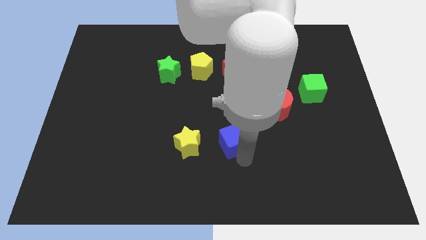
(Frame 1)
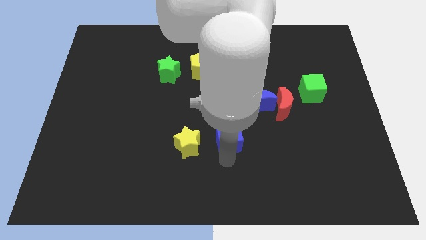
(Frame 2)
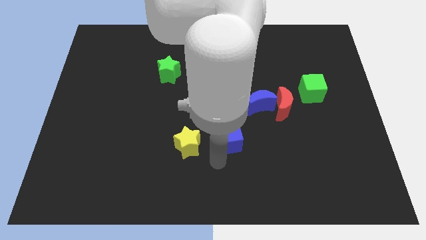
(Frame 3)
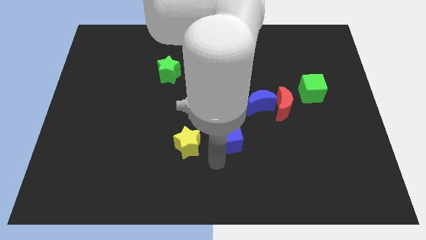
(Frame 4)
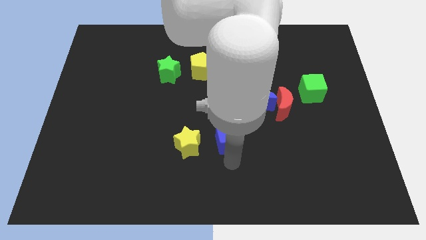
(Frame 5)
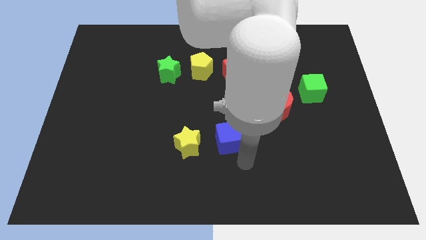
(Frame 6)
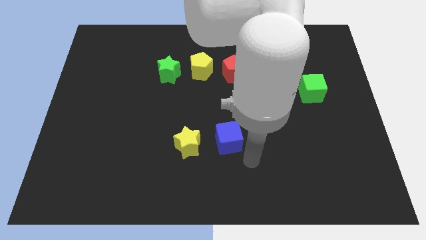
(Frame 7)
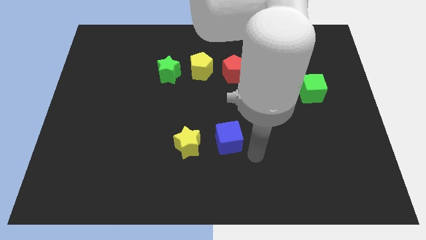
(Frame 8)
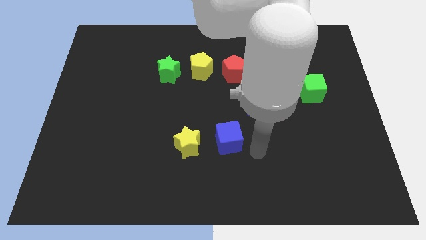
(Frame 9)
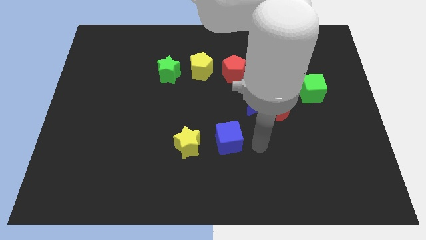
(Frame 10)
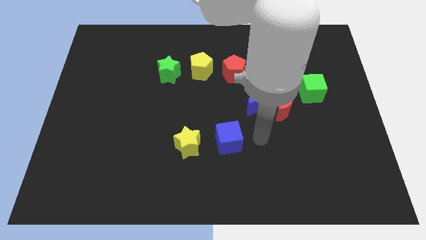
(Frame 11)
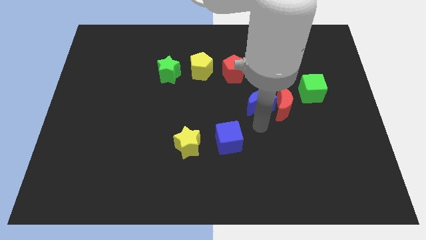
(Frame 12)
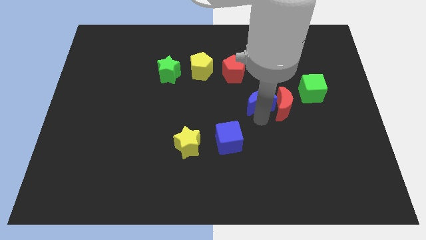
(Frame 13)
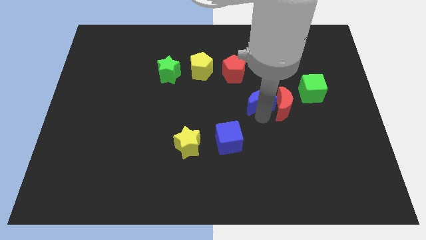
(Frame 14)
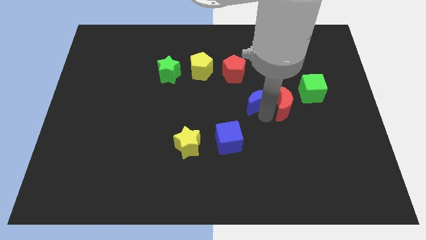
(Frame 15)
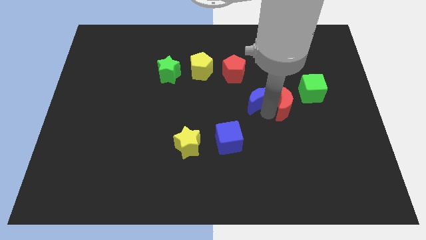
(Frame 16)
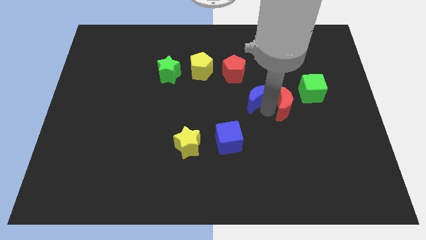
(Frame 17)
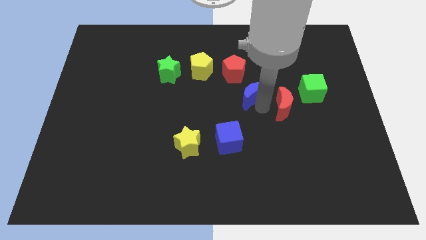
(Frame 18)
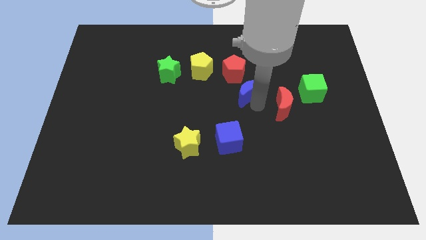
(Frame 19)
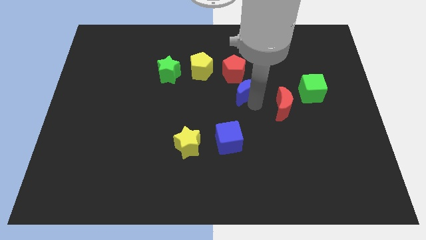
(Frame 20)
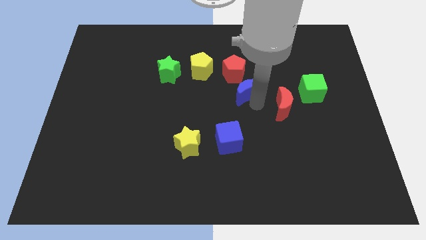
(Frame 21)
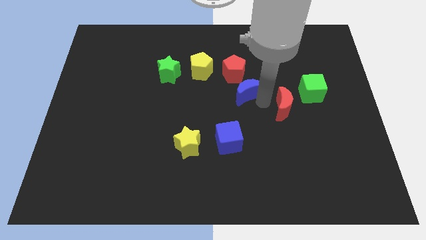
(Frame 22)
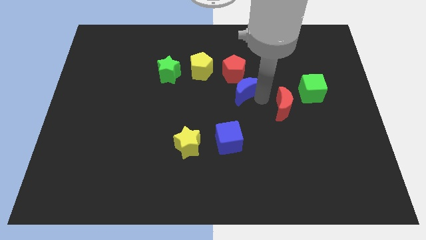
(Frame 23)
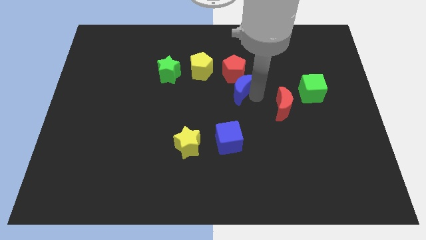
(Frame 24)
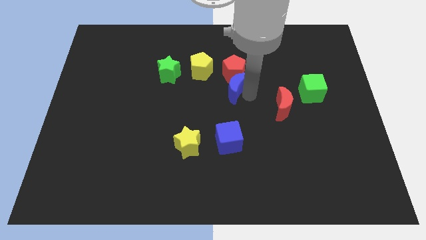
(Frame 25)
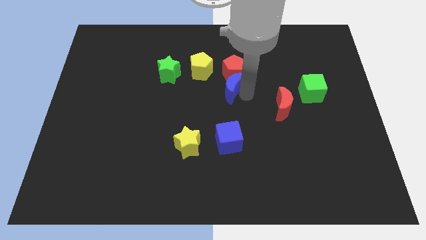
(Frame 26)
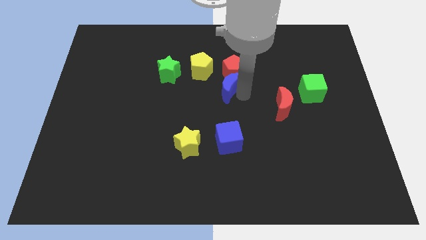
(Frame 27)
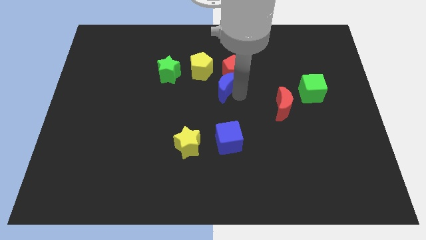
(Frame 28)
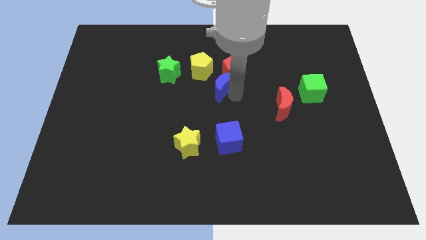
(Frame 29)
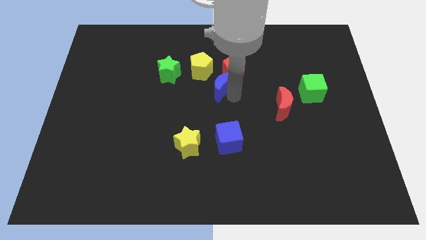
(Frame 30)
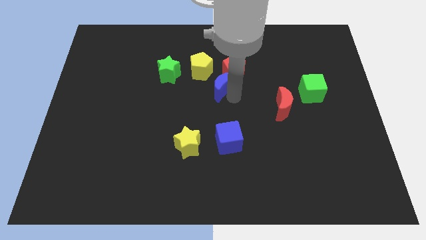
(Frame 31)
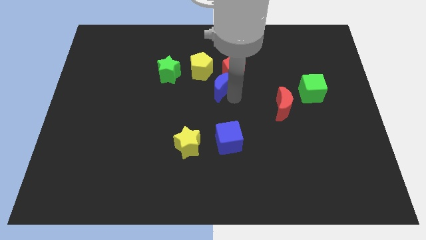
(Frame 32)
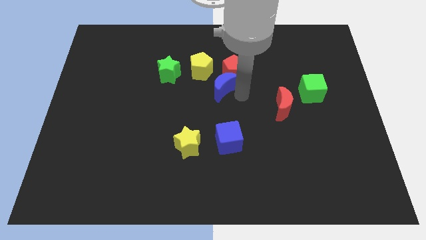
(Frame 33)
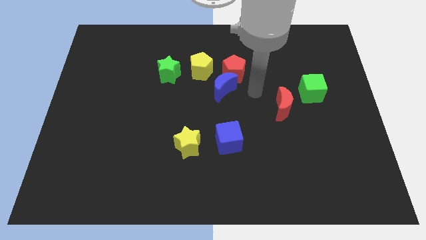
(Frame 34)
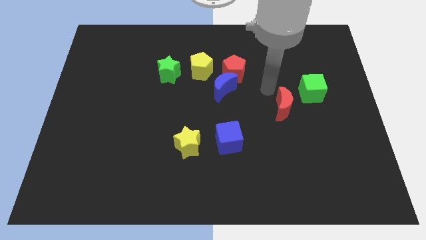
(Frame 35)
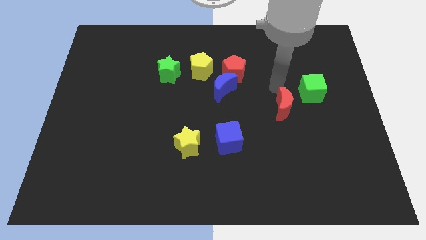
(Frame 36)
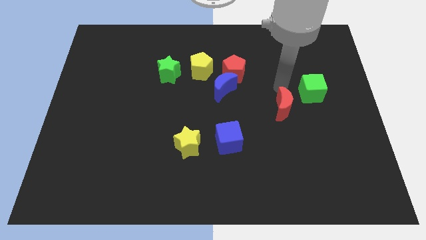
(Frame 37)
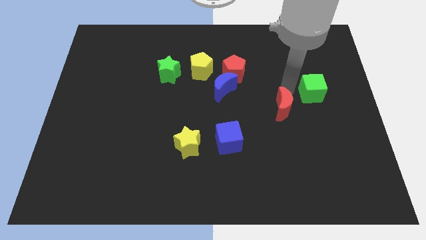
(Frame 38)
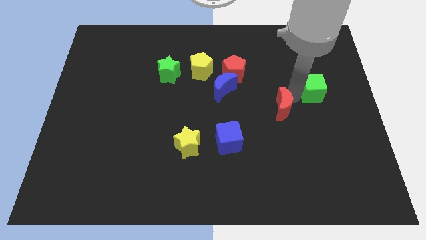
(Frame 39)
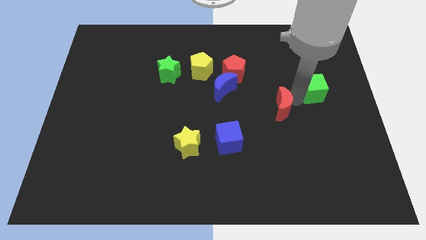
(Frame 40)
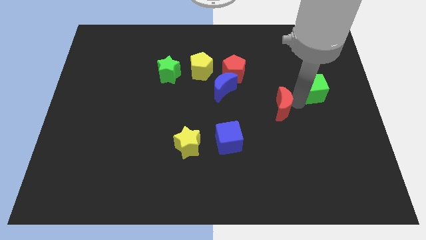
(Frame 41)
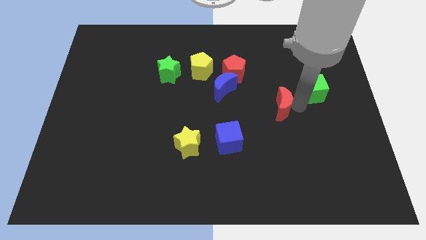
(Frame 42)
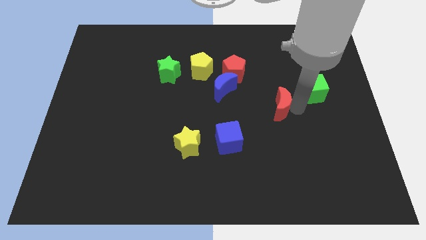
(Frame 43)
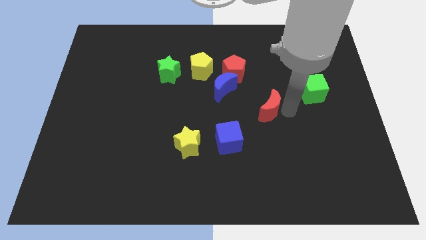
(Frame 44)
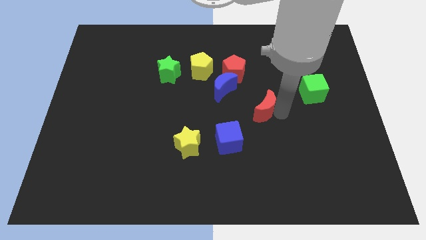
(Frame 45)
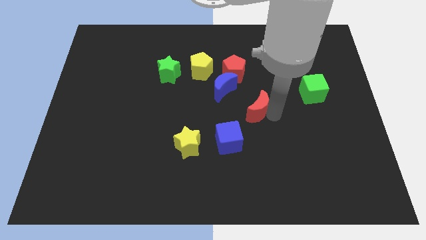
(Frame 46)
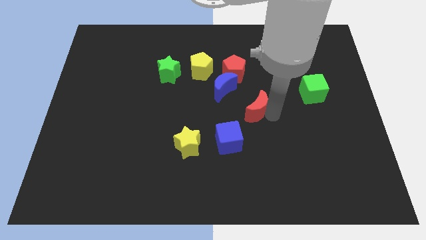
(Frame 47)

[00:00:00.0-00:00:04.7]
place the blue moon below the red pentagon

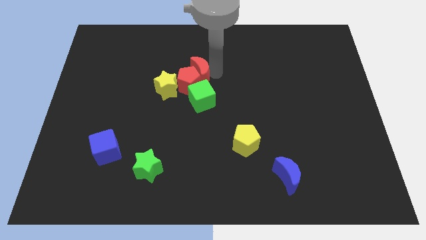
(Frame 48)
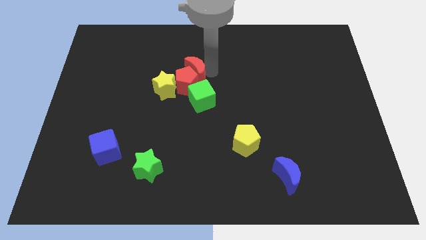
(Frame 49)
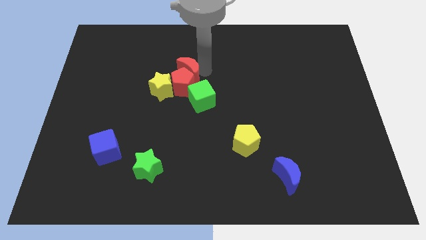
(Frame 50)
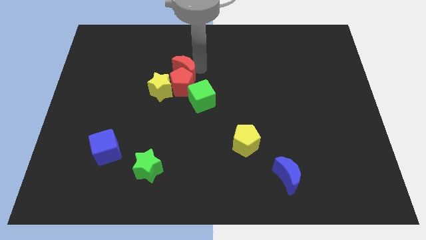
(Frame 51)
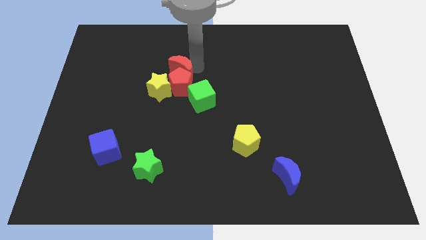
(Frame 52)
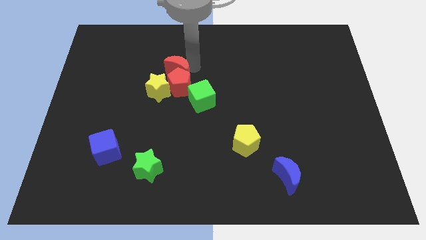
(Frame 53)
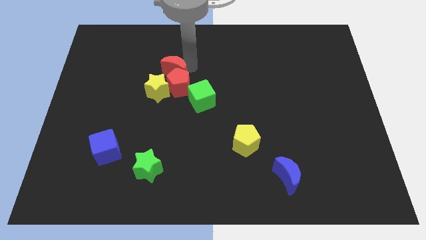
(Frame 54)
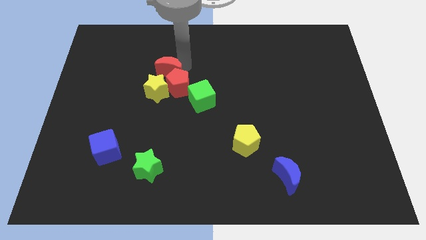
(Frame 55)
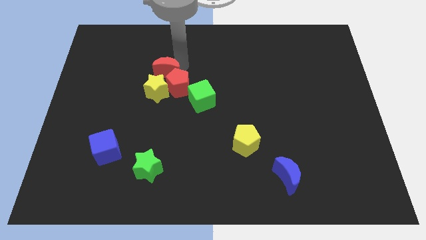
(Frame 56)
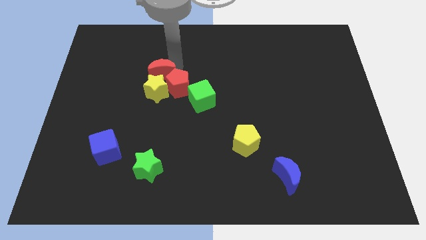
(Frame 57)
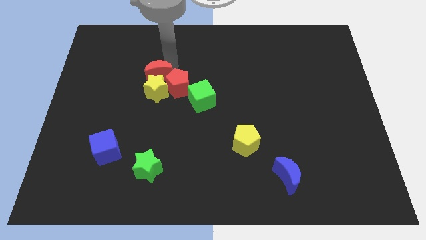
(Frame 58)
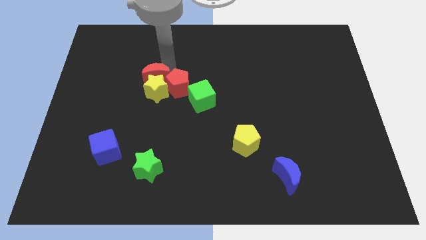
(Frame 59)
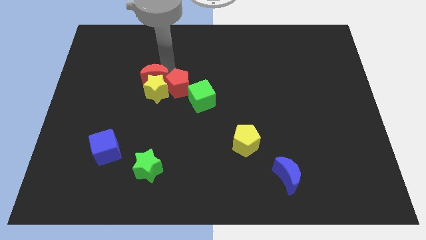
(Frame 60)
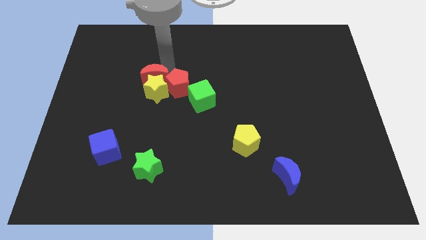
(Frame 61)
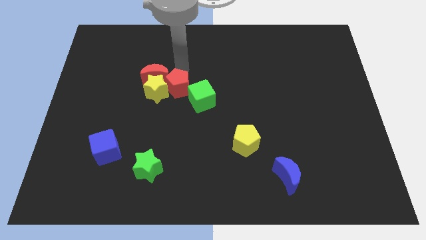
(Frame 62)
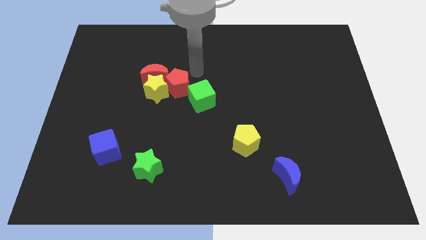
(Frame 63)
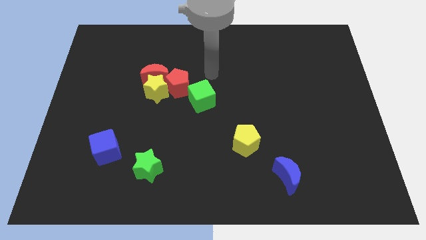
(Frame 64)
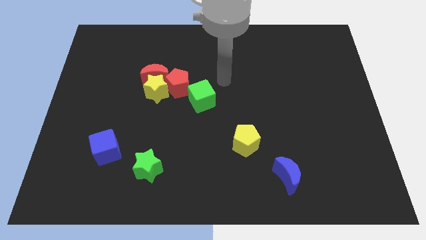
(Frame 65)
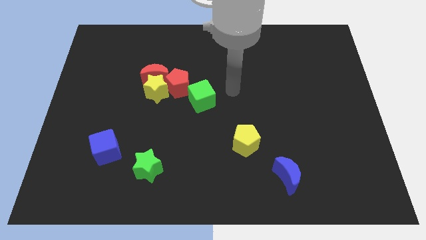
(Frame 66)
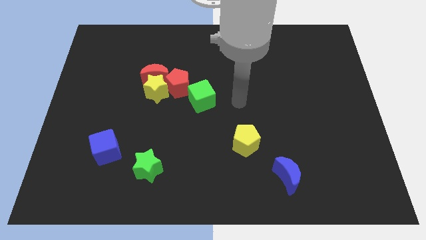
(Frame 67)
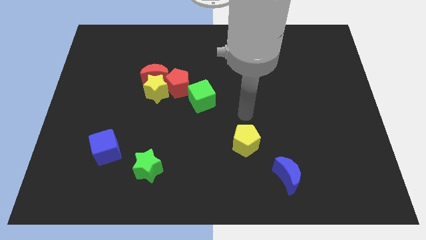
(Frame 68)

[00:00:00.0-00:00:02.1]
move red moon above the yellow star

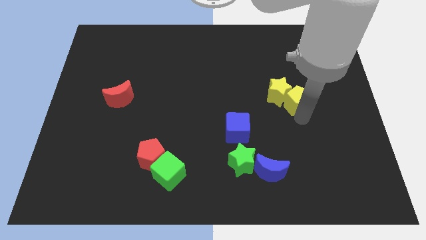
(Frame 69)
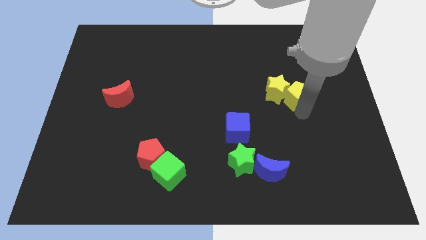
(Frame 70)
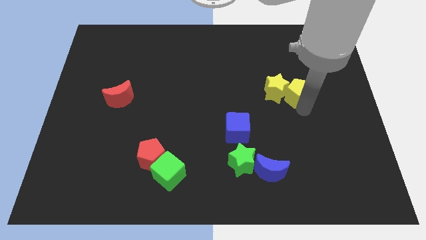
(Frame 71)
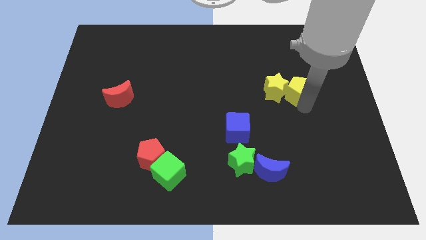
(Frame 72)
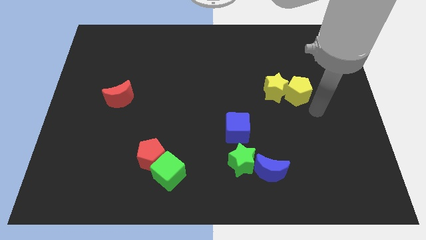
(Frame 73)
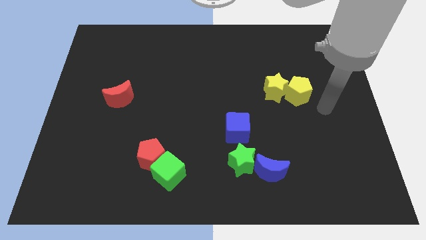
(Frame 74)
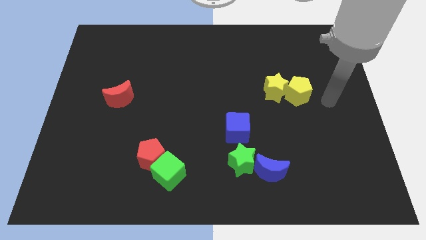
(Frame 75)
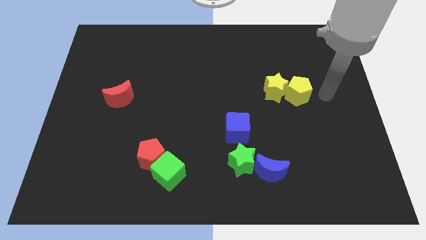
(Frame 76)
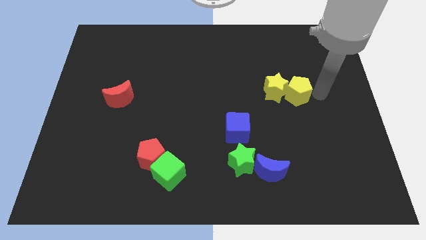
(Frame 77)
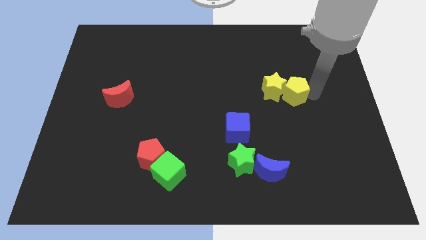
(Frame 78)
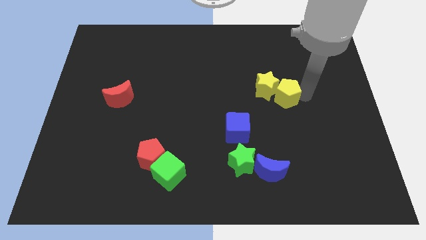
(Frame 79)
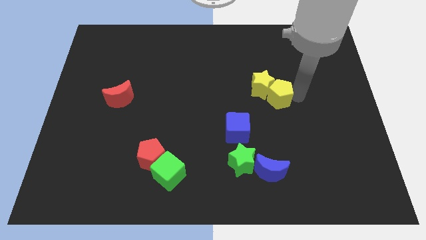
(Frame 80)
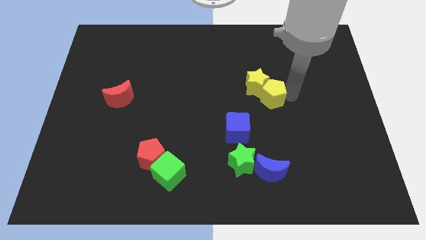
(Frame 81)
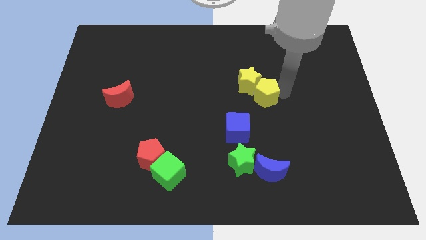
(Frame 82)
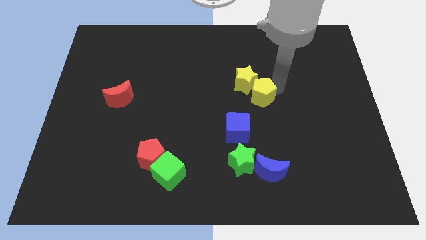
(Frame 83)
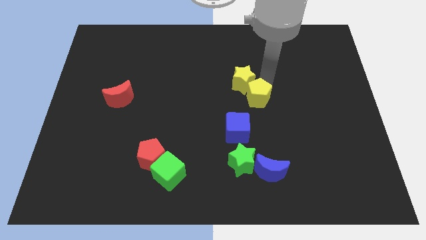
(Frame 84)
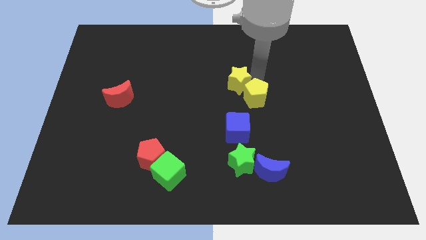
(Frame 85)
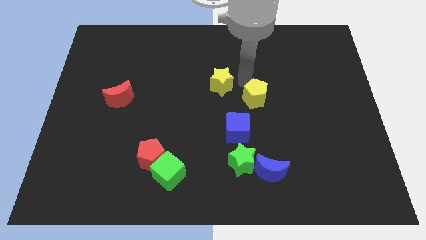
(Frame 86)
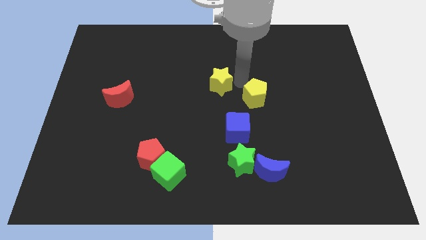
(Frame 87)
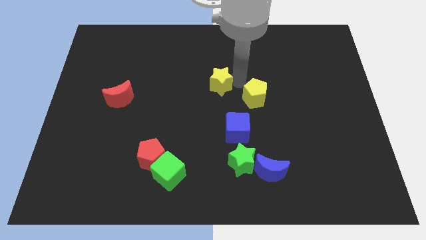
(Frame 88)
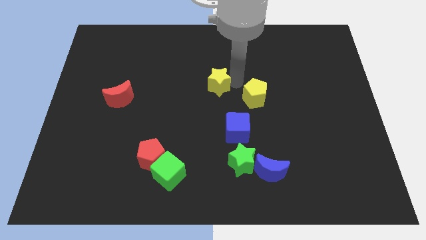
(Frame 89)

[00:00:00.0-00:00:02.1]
separate yellow star from yellow pentagon

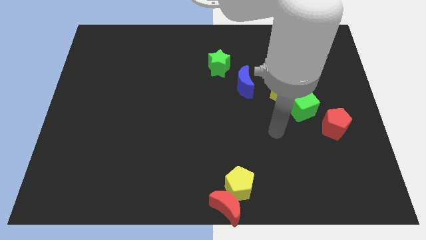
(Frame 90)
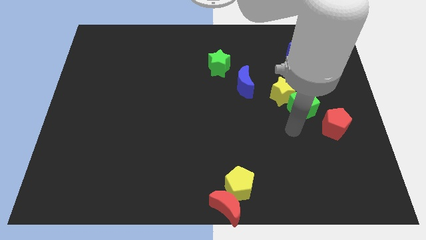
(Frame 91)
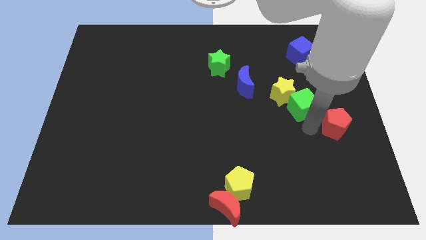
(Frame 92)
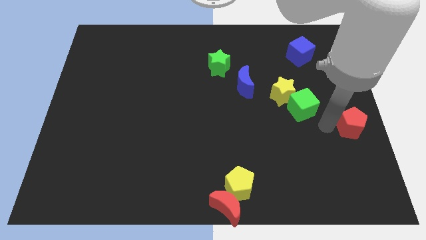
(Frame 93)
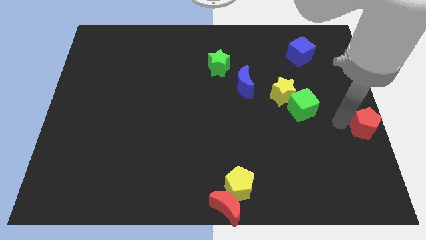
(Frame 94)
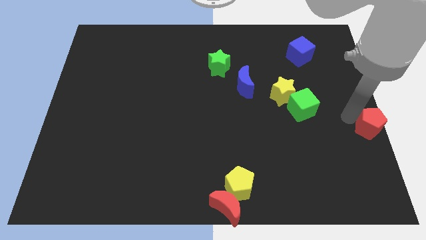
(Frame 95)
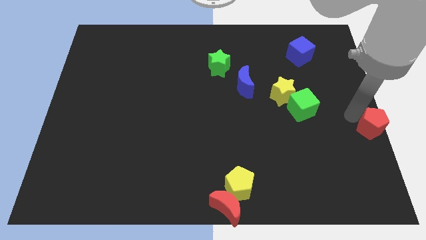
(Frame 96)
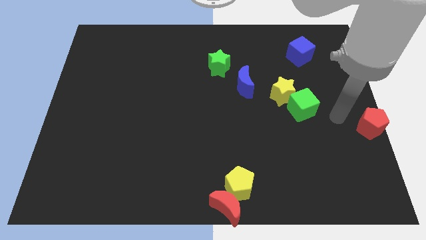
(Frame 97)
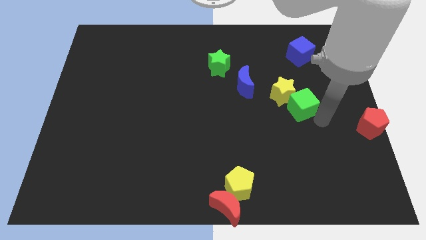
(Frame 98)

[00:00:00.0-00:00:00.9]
move the red pentagon towards the right side of the board
